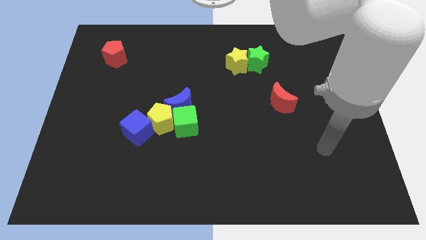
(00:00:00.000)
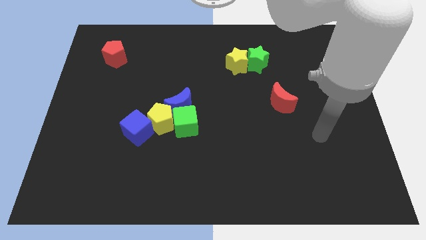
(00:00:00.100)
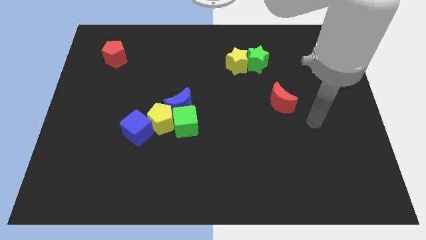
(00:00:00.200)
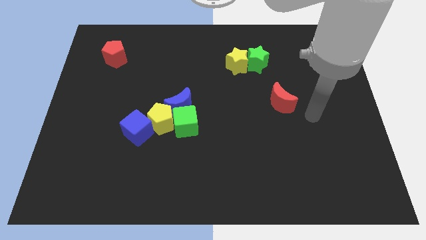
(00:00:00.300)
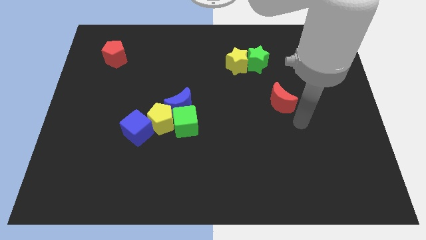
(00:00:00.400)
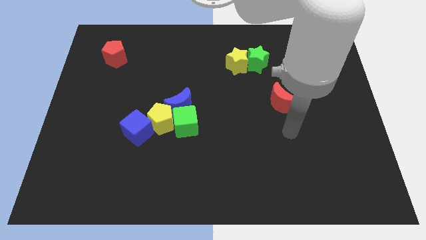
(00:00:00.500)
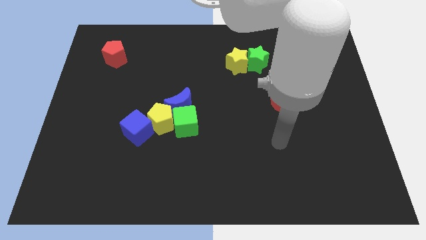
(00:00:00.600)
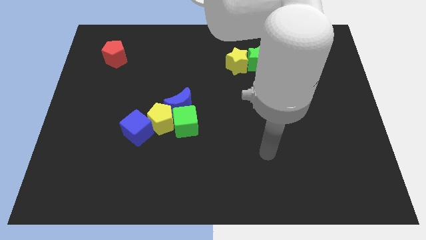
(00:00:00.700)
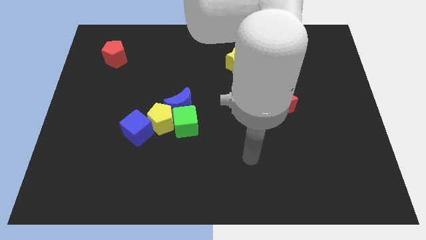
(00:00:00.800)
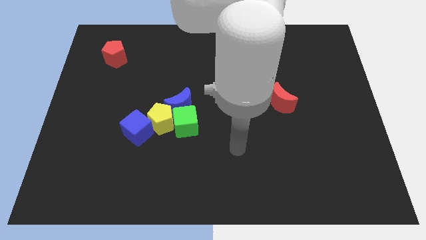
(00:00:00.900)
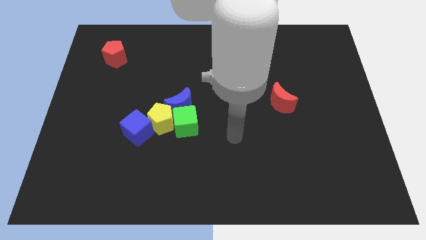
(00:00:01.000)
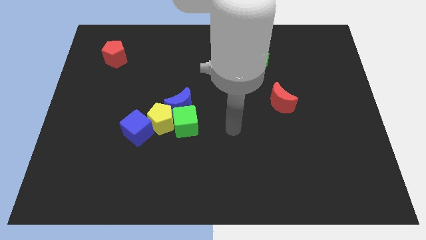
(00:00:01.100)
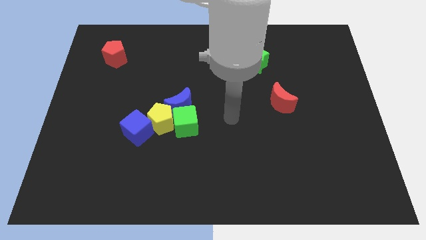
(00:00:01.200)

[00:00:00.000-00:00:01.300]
move your arm in between the green cube and red moon

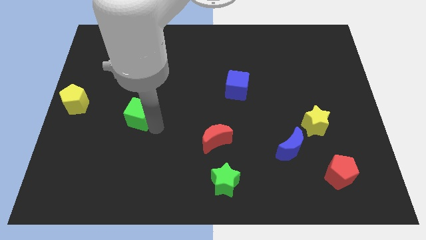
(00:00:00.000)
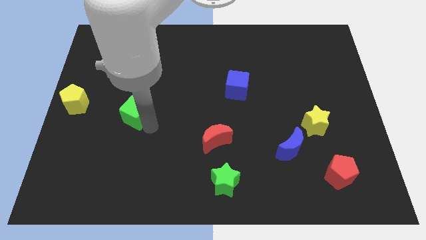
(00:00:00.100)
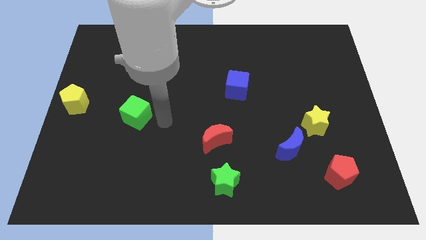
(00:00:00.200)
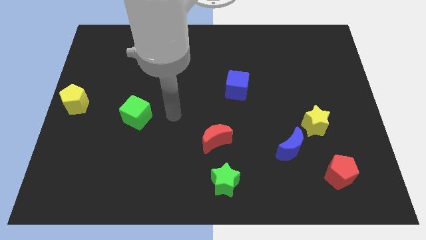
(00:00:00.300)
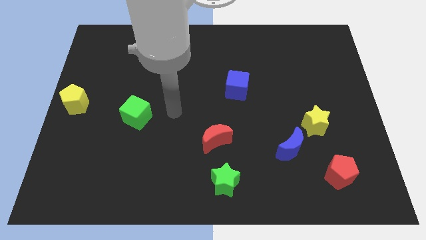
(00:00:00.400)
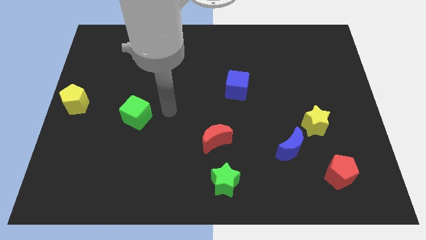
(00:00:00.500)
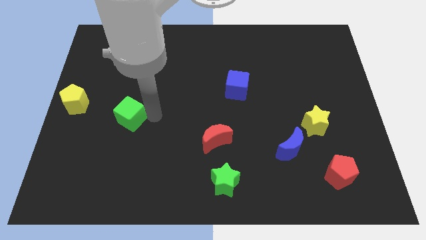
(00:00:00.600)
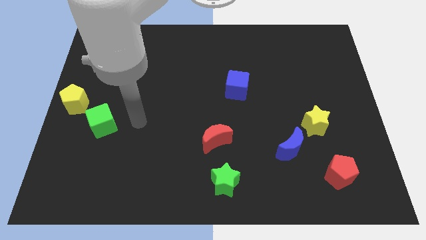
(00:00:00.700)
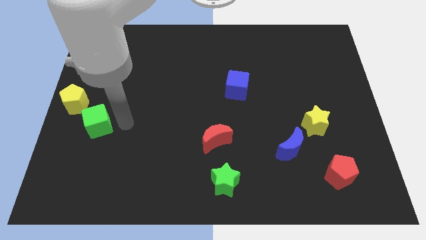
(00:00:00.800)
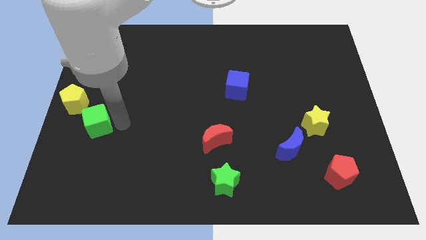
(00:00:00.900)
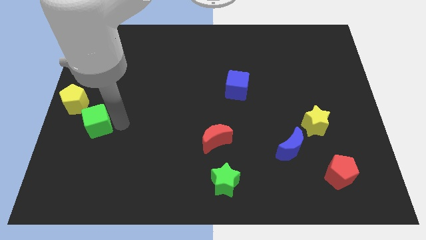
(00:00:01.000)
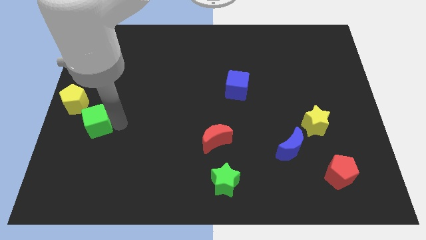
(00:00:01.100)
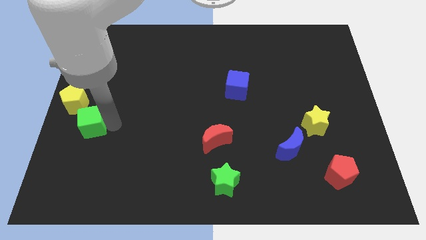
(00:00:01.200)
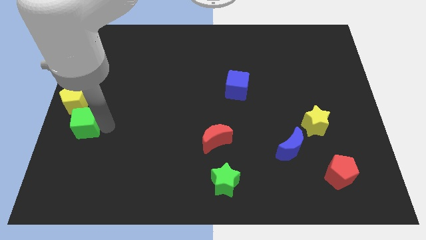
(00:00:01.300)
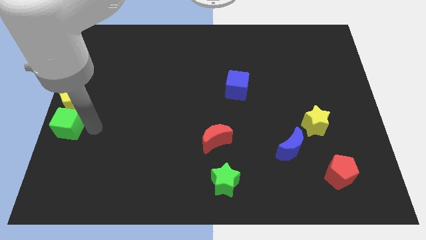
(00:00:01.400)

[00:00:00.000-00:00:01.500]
slide the green cube below the yellow pentagon

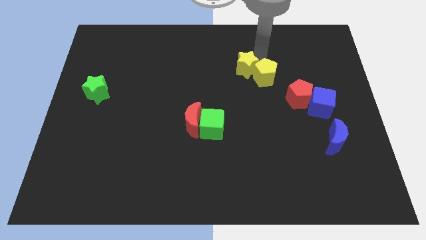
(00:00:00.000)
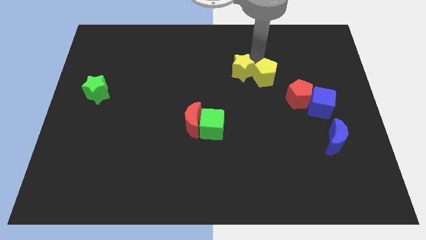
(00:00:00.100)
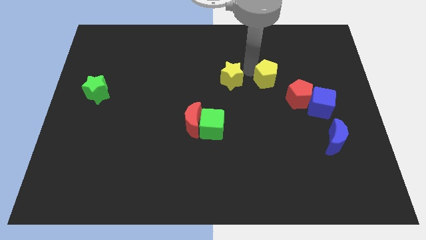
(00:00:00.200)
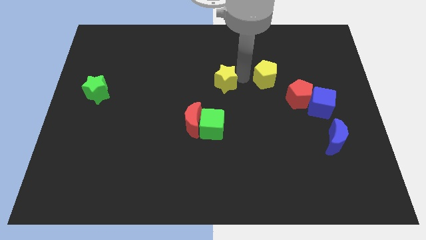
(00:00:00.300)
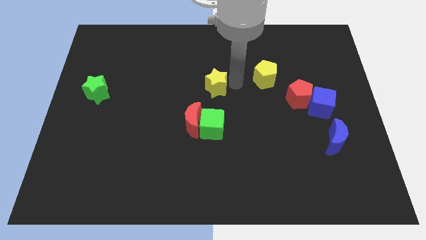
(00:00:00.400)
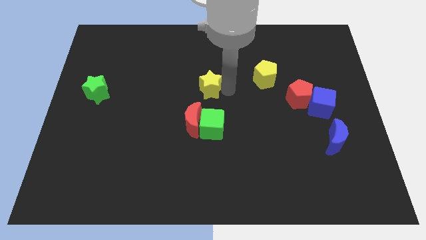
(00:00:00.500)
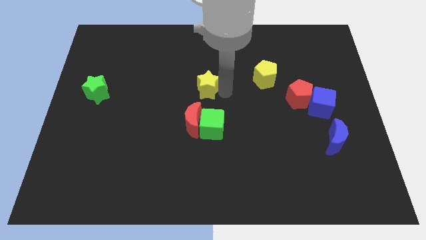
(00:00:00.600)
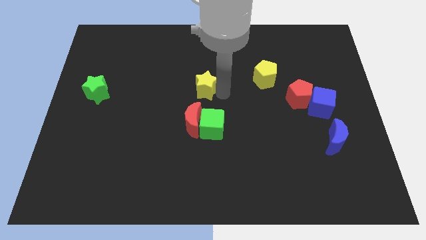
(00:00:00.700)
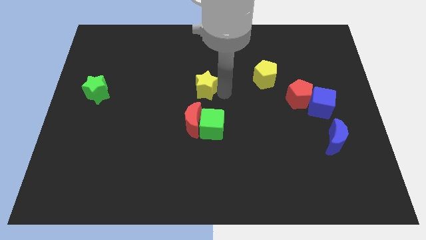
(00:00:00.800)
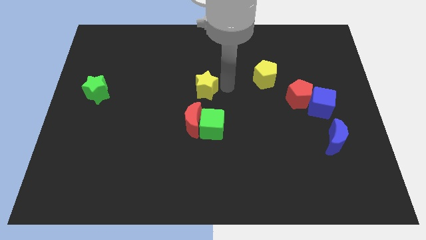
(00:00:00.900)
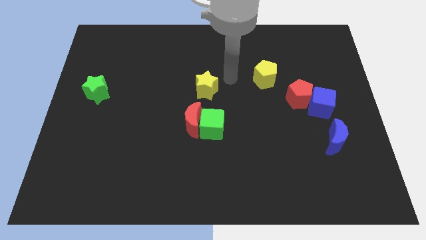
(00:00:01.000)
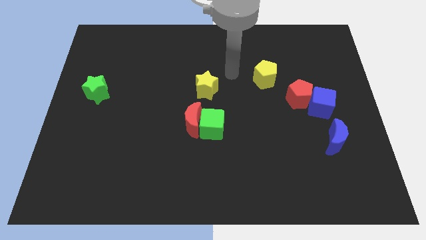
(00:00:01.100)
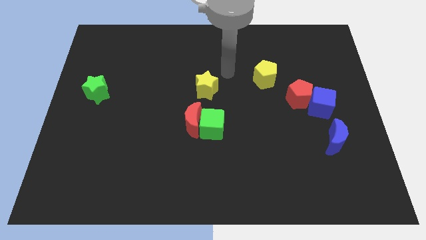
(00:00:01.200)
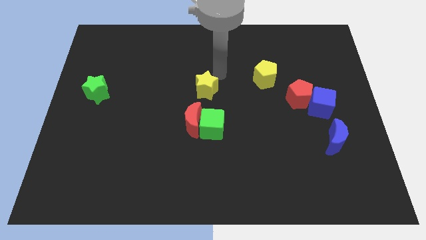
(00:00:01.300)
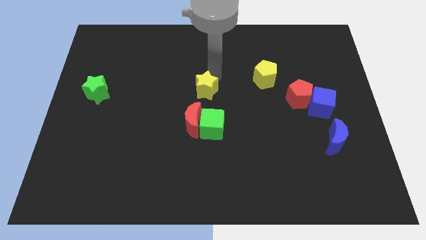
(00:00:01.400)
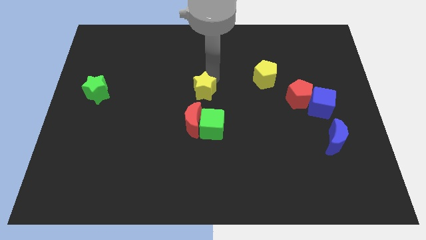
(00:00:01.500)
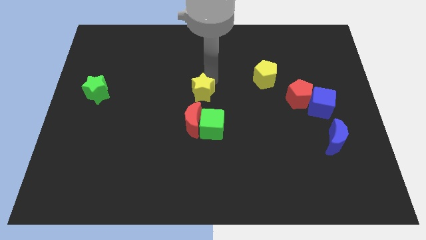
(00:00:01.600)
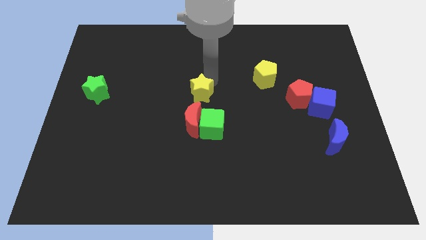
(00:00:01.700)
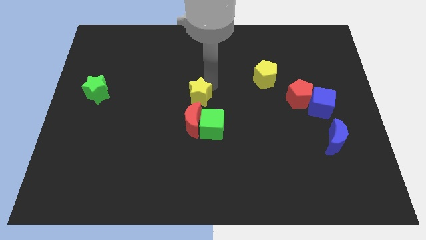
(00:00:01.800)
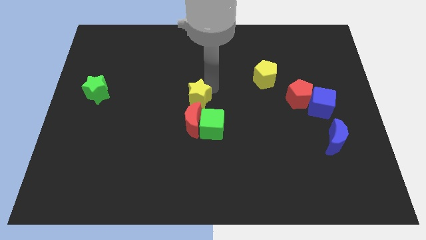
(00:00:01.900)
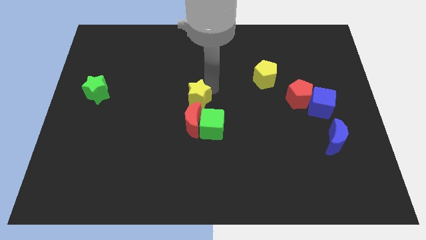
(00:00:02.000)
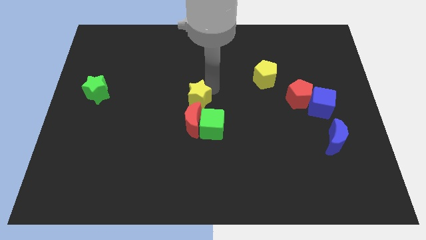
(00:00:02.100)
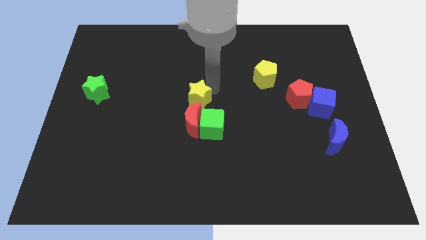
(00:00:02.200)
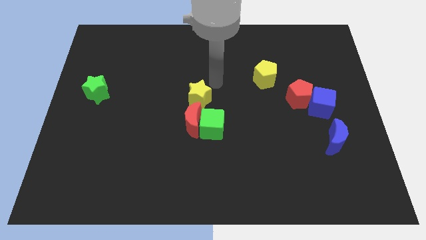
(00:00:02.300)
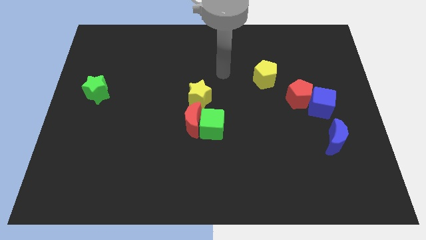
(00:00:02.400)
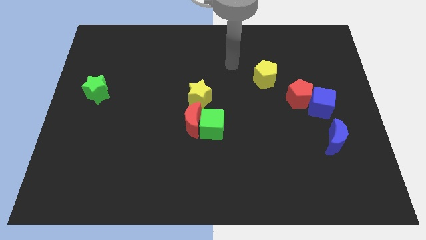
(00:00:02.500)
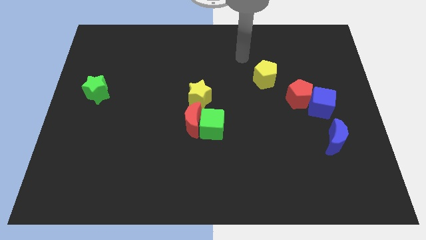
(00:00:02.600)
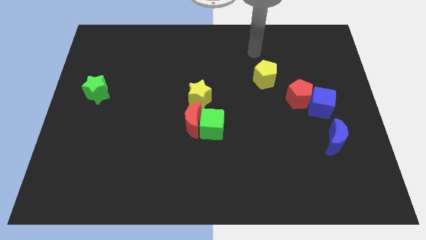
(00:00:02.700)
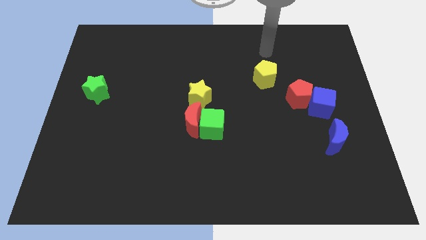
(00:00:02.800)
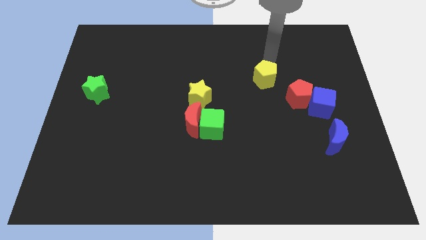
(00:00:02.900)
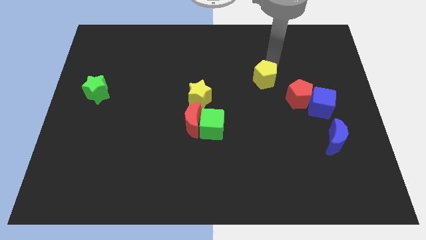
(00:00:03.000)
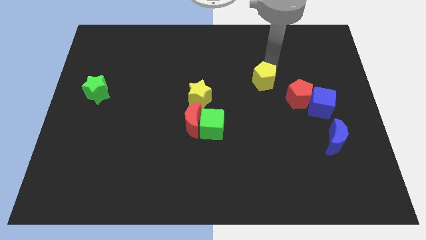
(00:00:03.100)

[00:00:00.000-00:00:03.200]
separate yellow star from yellow pentagon

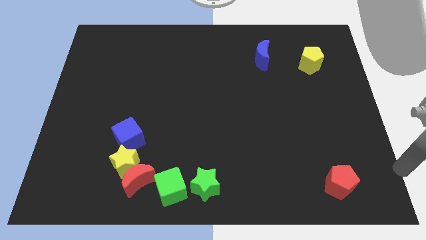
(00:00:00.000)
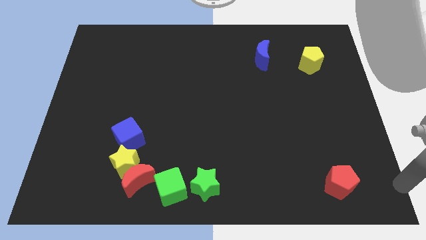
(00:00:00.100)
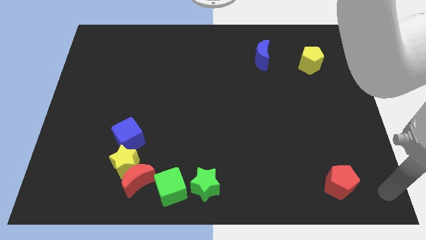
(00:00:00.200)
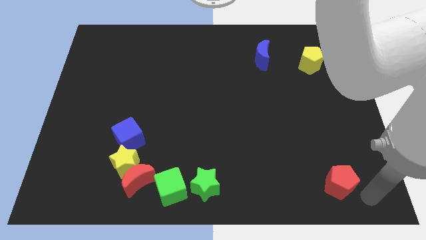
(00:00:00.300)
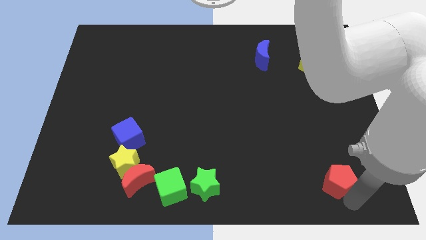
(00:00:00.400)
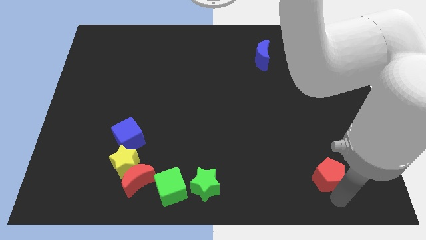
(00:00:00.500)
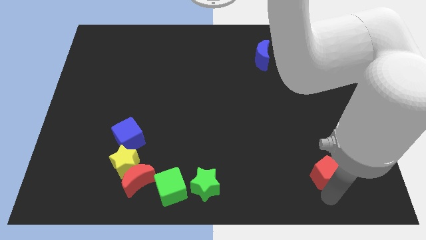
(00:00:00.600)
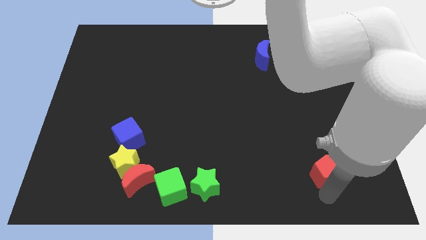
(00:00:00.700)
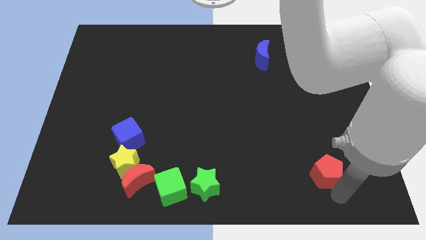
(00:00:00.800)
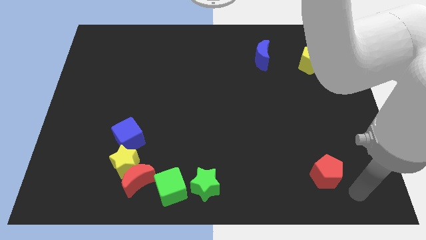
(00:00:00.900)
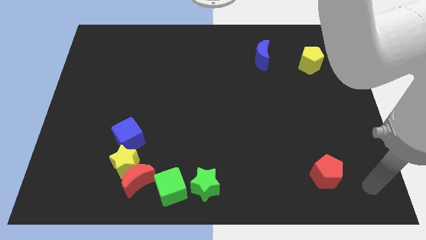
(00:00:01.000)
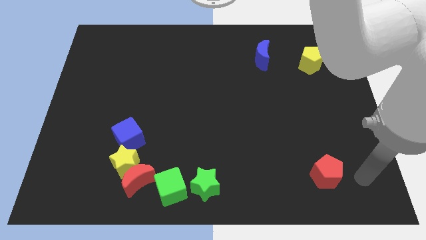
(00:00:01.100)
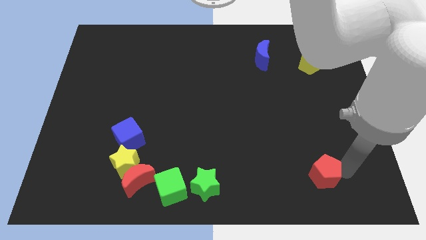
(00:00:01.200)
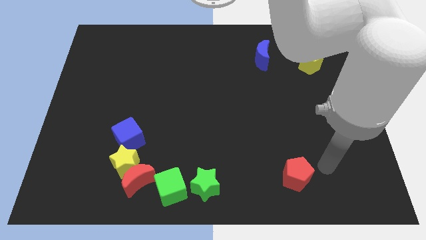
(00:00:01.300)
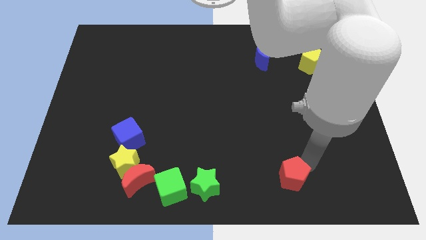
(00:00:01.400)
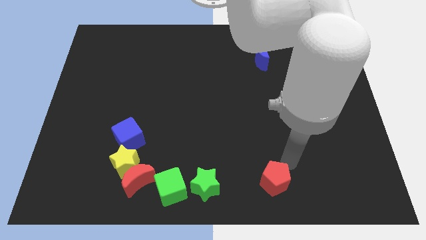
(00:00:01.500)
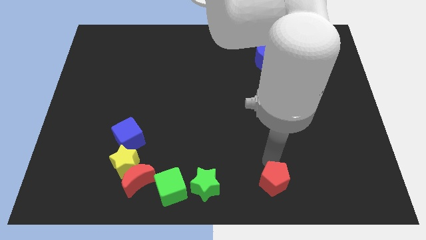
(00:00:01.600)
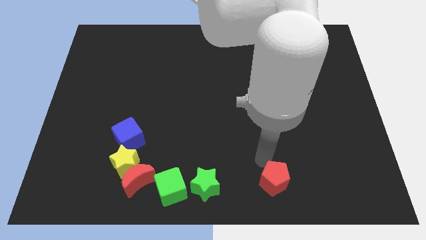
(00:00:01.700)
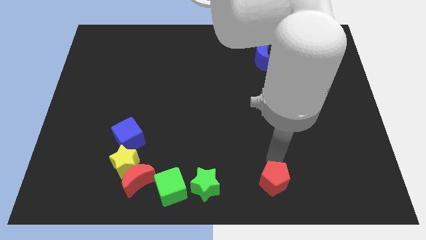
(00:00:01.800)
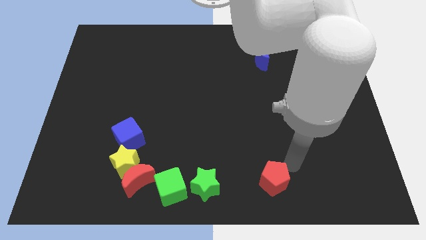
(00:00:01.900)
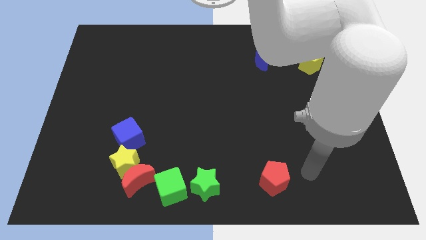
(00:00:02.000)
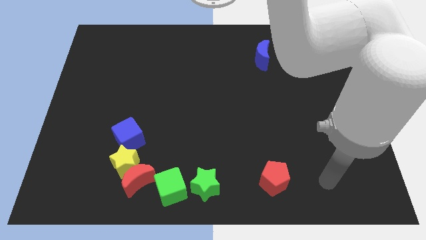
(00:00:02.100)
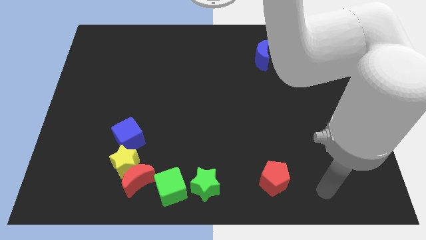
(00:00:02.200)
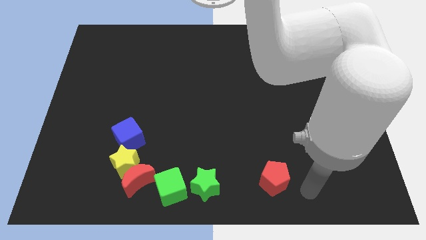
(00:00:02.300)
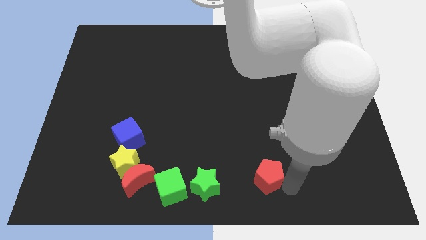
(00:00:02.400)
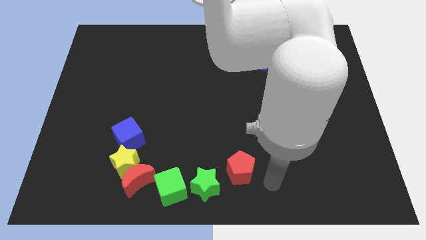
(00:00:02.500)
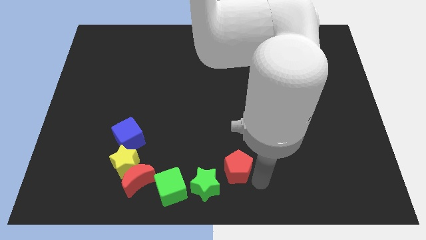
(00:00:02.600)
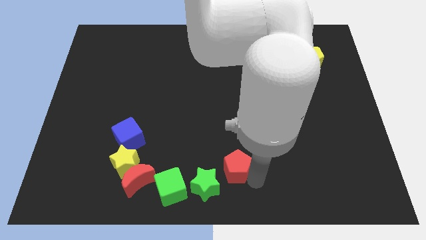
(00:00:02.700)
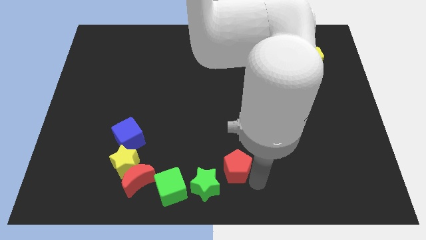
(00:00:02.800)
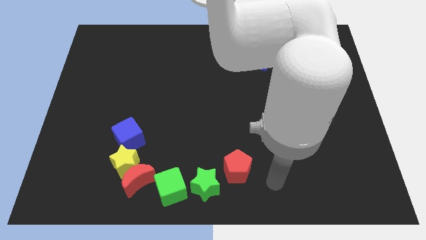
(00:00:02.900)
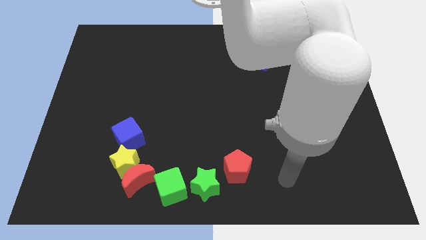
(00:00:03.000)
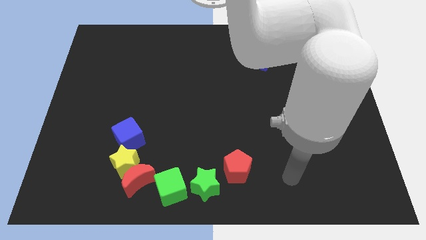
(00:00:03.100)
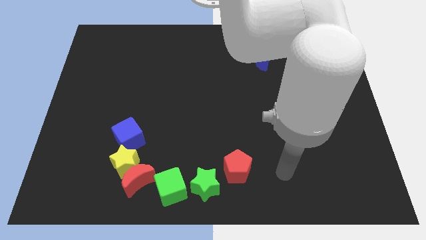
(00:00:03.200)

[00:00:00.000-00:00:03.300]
move the red pentagon to the top right corner of the green star
